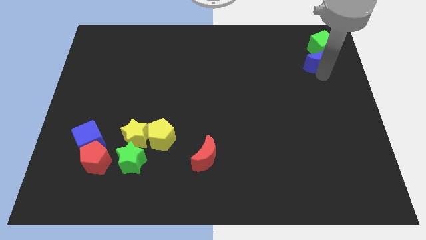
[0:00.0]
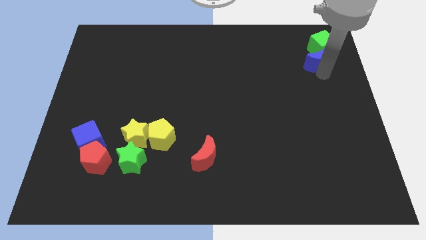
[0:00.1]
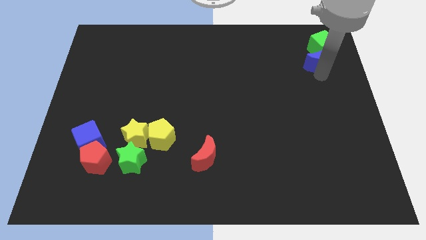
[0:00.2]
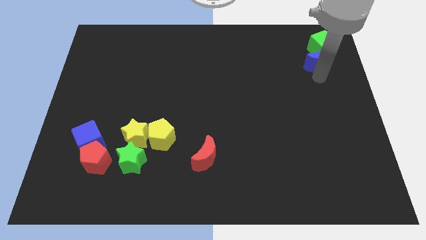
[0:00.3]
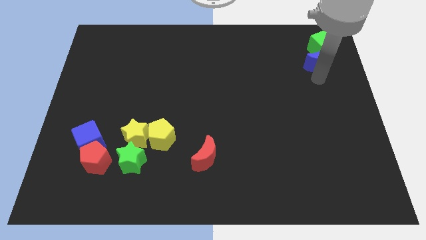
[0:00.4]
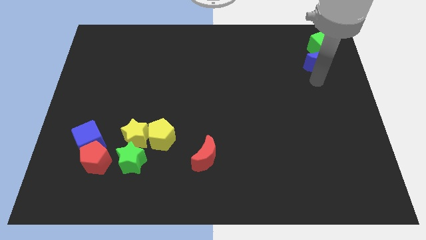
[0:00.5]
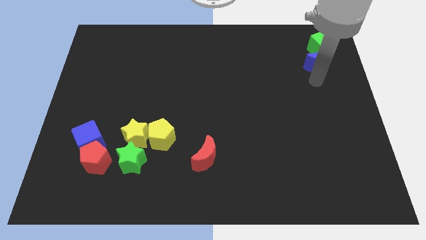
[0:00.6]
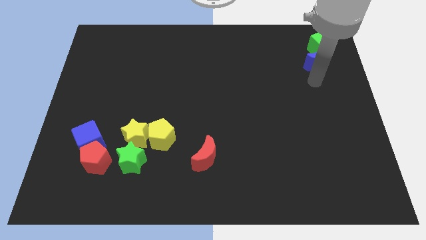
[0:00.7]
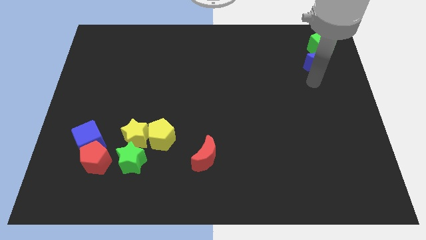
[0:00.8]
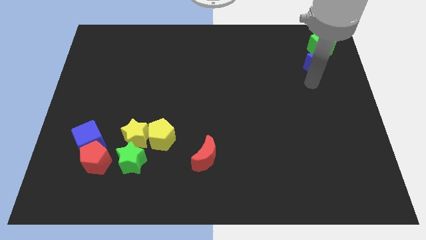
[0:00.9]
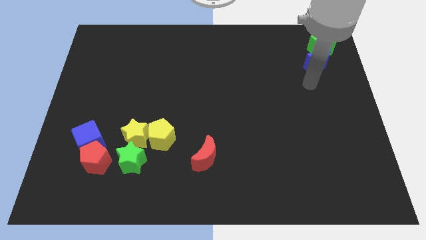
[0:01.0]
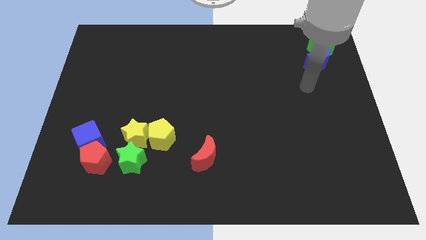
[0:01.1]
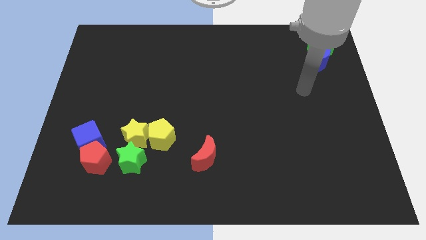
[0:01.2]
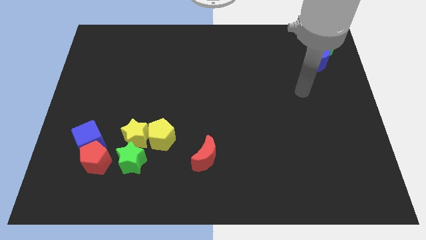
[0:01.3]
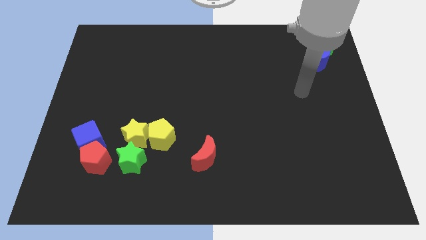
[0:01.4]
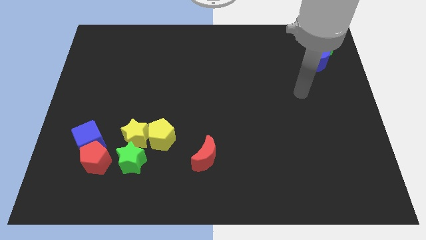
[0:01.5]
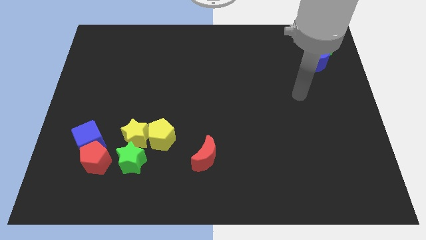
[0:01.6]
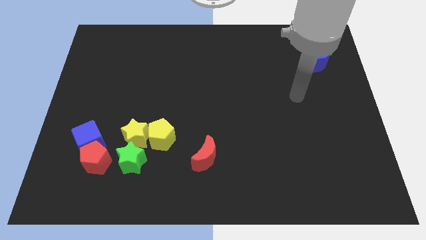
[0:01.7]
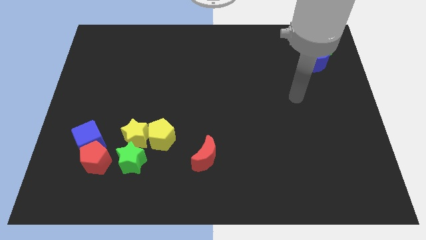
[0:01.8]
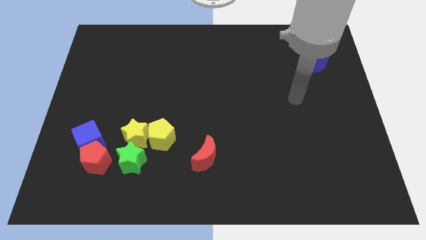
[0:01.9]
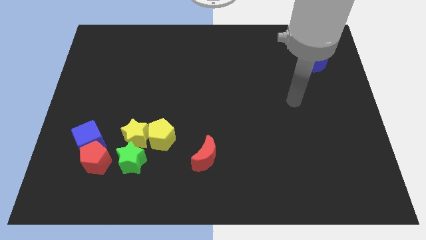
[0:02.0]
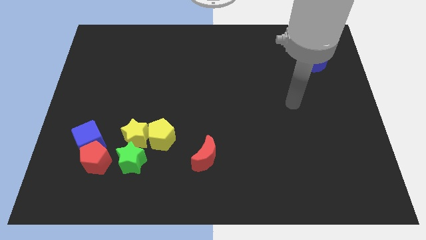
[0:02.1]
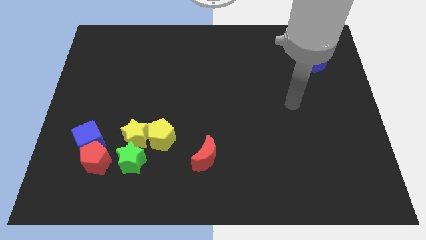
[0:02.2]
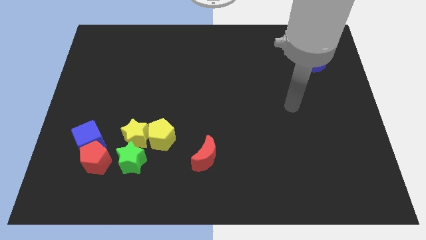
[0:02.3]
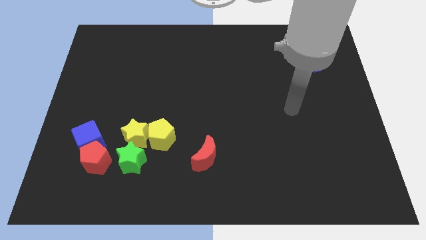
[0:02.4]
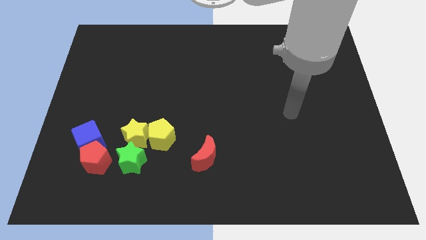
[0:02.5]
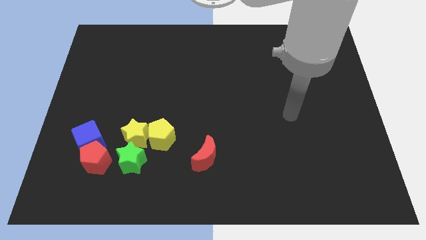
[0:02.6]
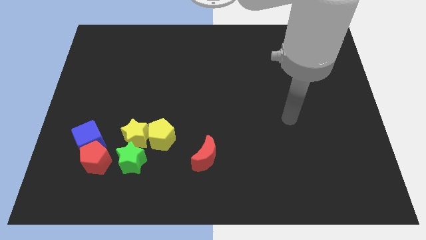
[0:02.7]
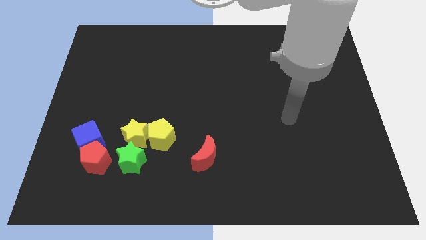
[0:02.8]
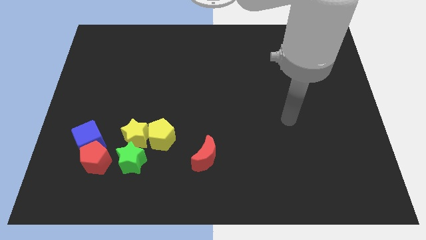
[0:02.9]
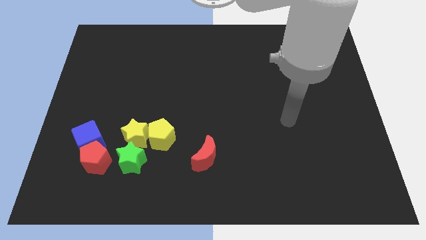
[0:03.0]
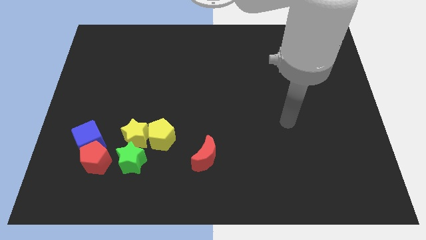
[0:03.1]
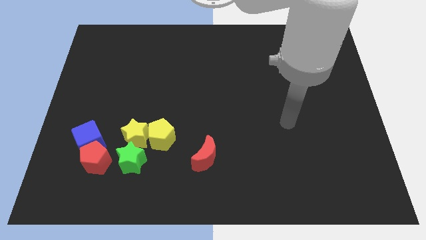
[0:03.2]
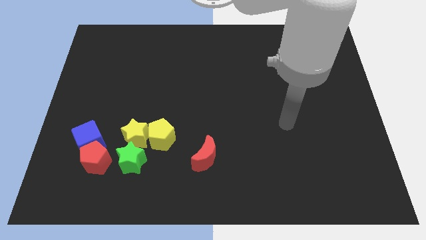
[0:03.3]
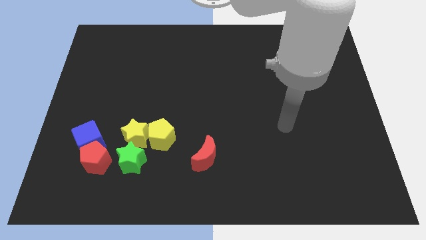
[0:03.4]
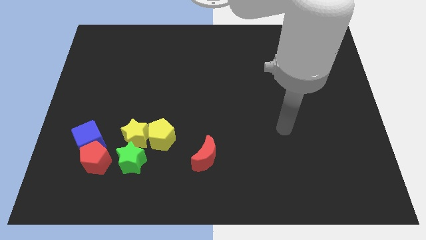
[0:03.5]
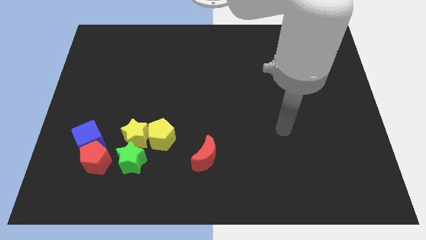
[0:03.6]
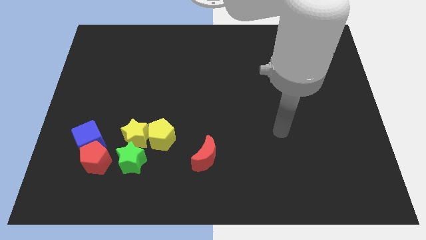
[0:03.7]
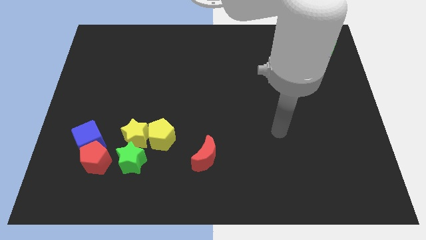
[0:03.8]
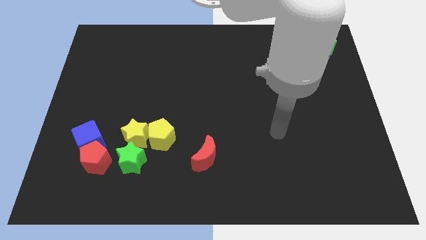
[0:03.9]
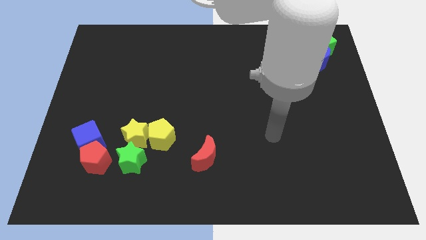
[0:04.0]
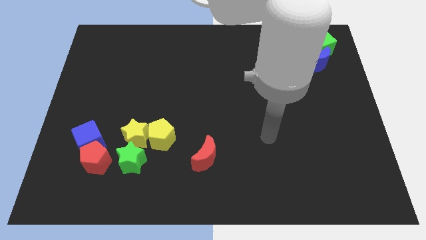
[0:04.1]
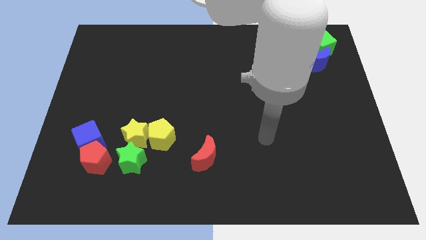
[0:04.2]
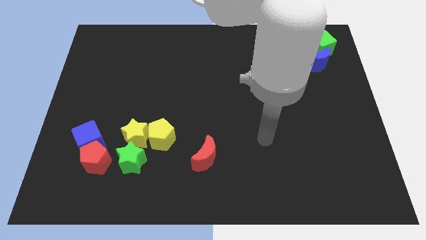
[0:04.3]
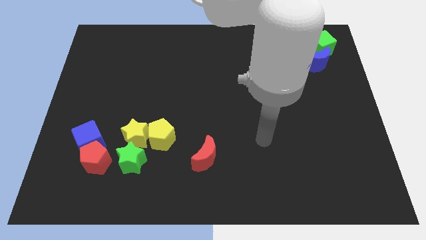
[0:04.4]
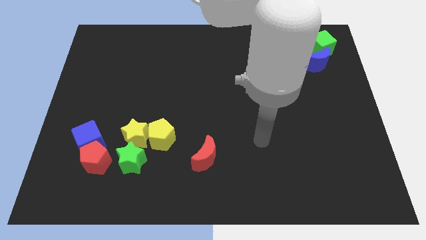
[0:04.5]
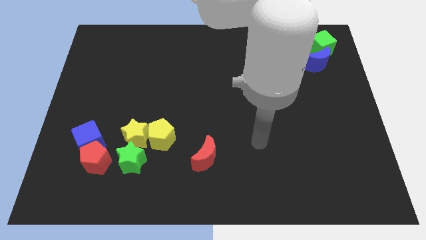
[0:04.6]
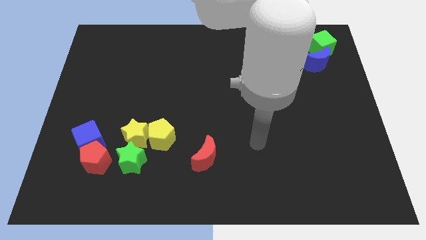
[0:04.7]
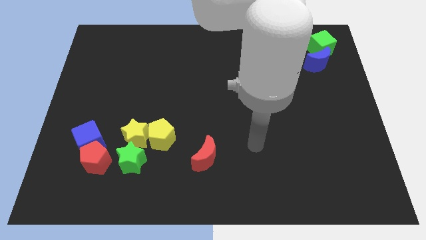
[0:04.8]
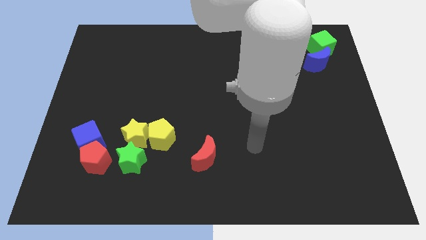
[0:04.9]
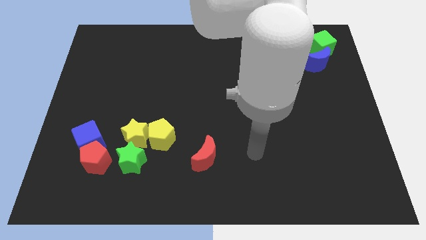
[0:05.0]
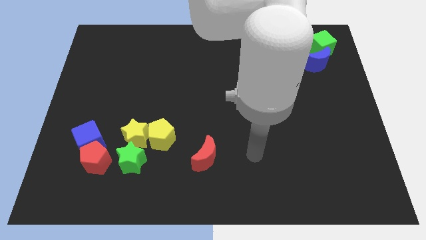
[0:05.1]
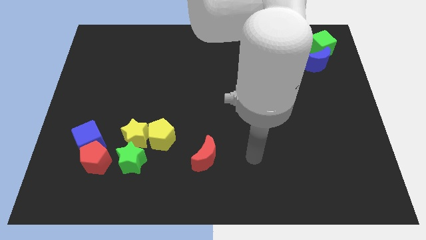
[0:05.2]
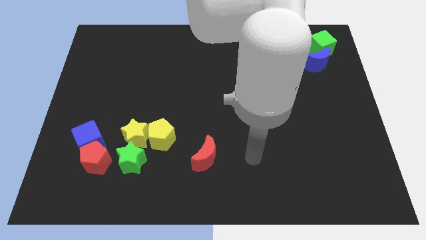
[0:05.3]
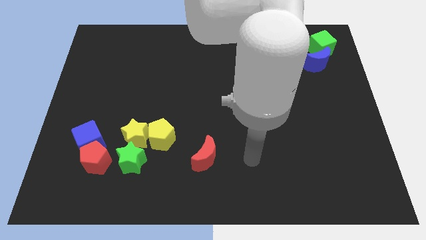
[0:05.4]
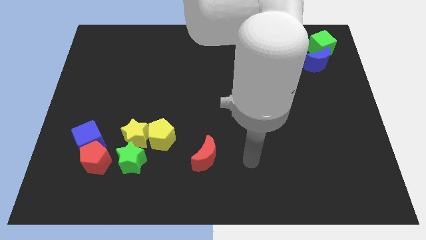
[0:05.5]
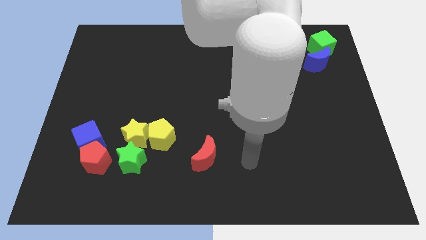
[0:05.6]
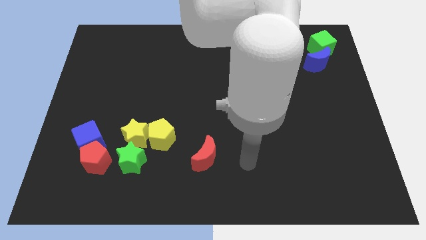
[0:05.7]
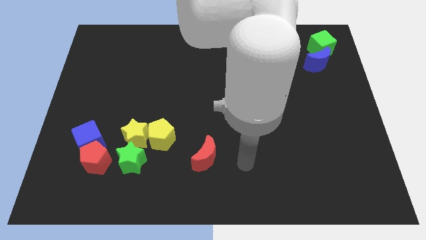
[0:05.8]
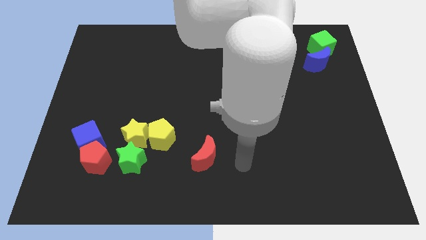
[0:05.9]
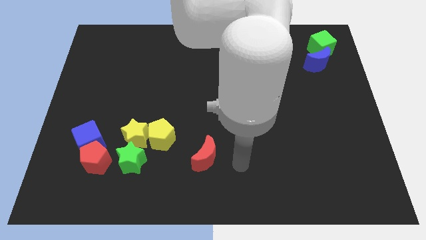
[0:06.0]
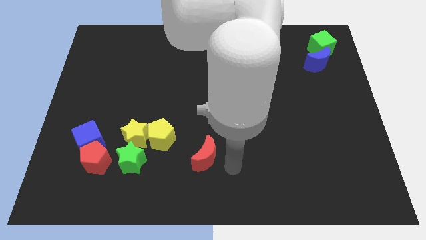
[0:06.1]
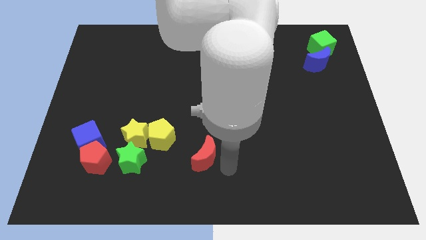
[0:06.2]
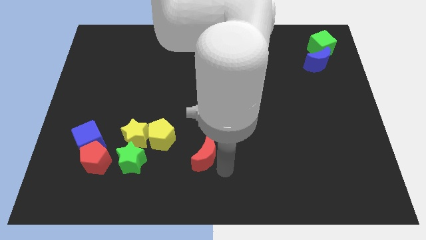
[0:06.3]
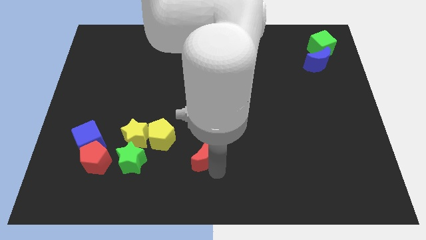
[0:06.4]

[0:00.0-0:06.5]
move your arm from blue moon to the red moon

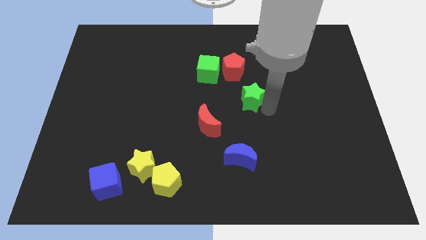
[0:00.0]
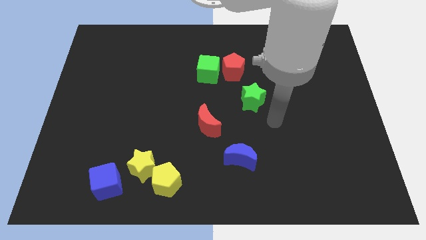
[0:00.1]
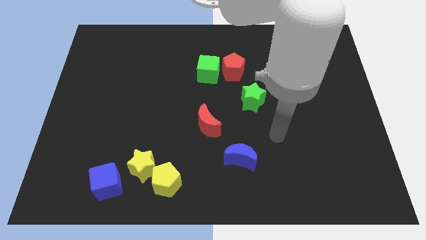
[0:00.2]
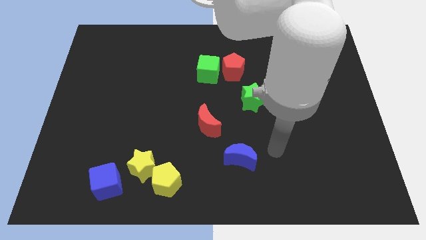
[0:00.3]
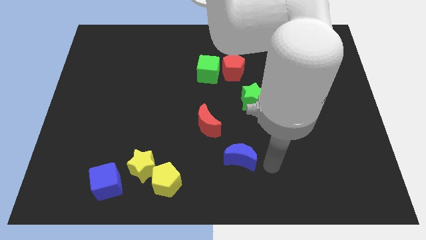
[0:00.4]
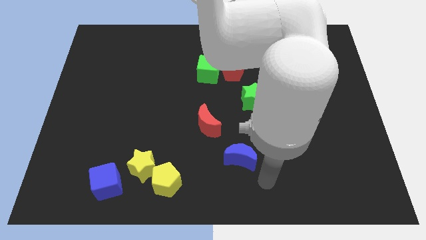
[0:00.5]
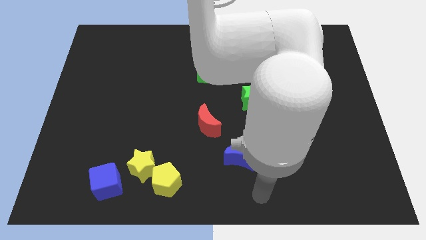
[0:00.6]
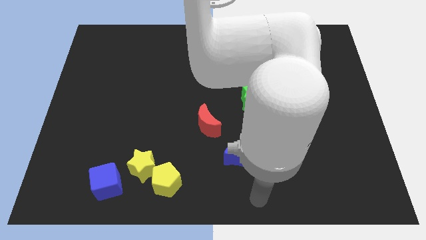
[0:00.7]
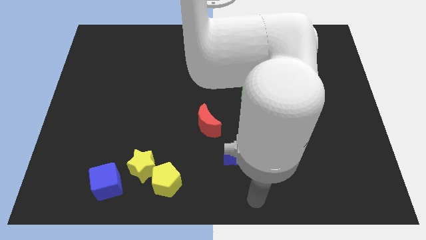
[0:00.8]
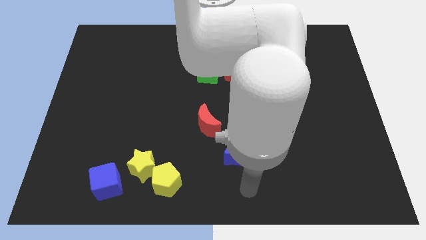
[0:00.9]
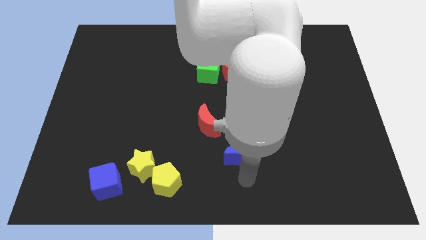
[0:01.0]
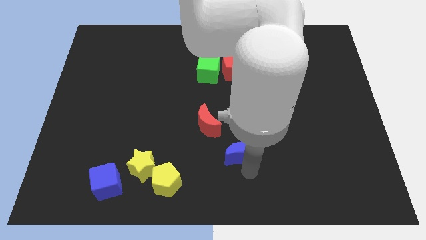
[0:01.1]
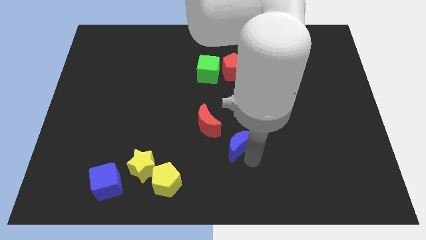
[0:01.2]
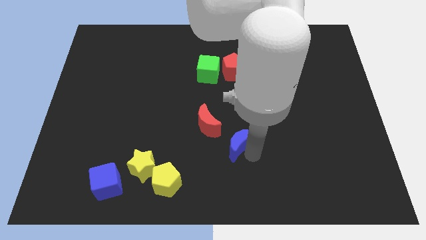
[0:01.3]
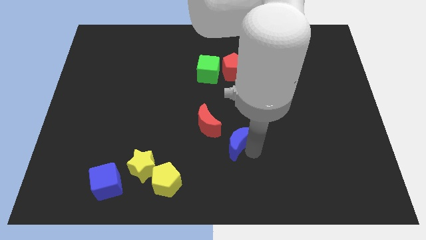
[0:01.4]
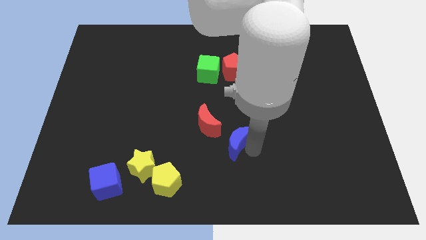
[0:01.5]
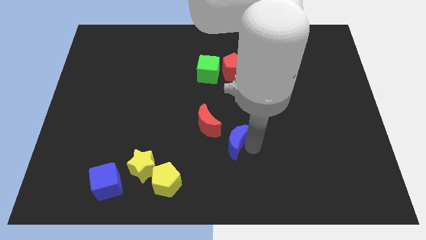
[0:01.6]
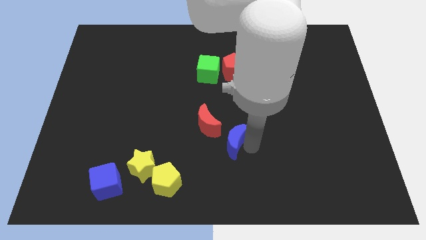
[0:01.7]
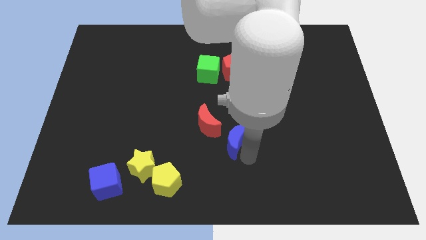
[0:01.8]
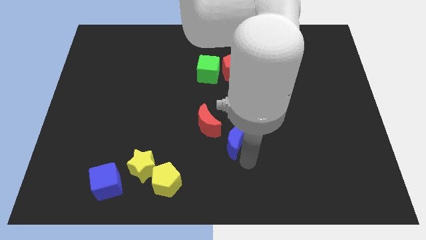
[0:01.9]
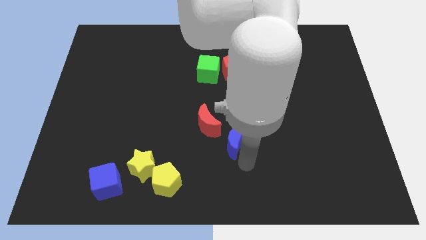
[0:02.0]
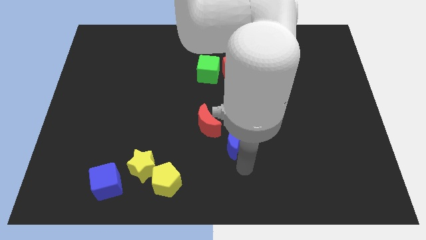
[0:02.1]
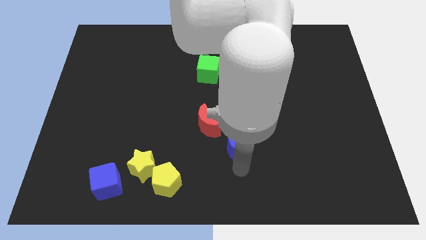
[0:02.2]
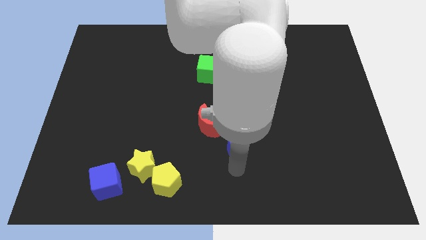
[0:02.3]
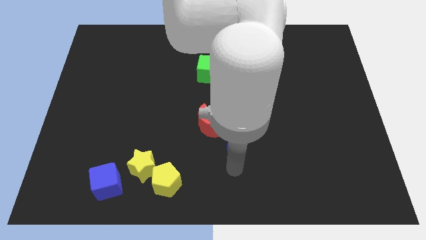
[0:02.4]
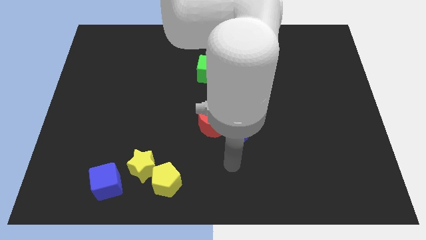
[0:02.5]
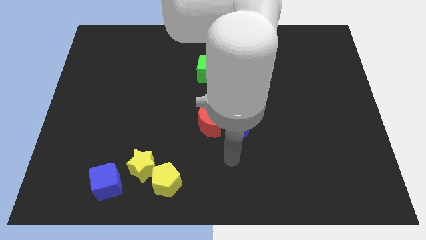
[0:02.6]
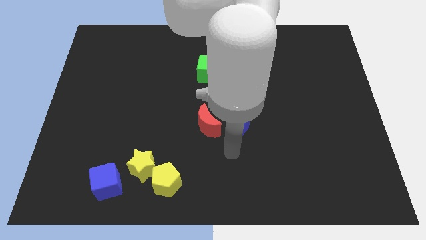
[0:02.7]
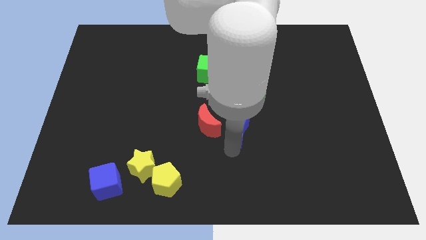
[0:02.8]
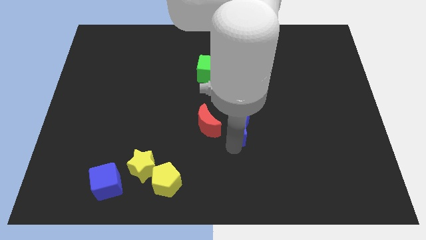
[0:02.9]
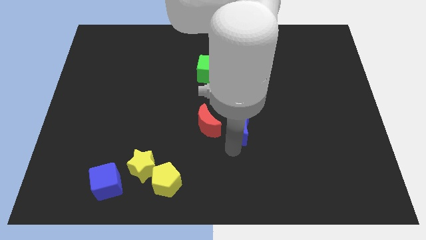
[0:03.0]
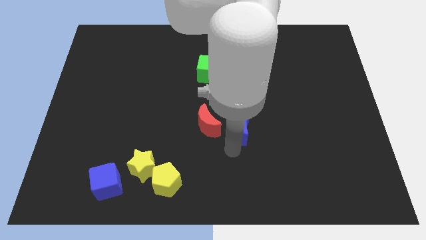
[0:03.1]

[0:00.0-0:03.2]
bring the blue moon at the right side of the red moon
